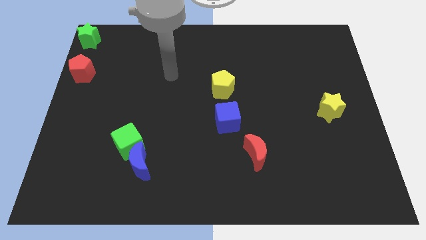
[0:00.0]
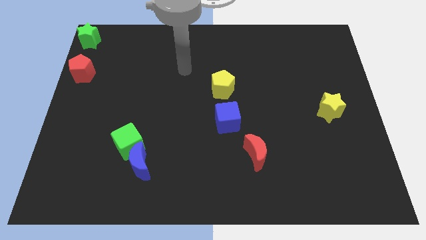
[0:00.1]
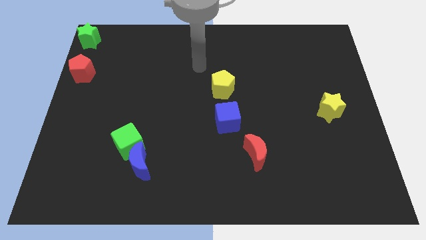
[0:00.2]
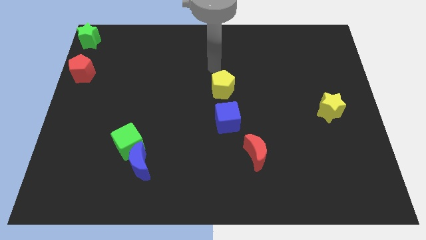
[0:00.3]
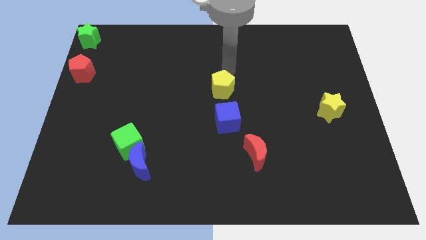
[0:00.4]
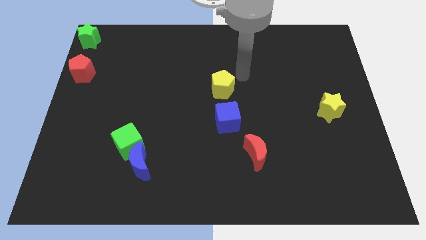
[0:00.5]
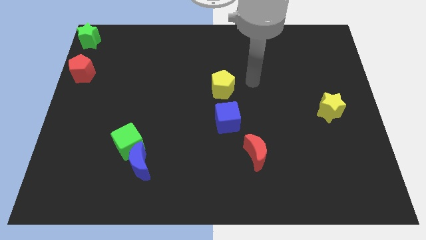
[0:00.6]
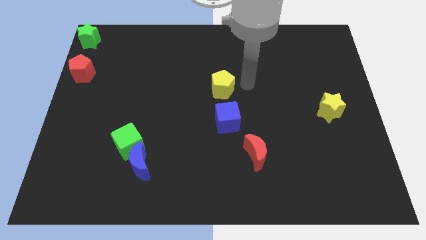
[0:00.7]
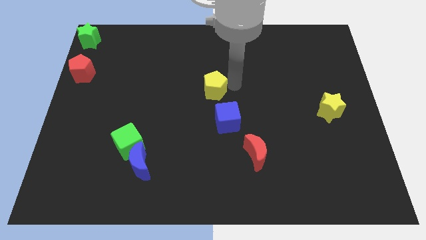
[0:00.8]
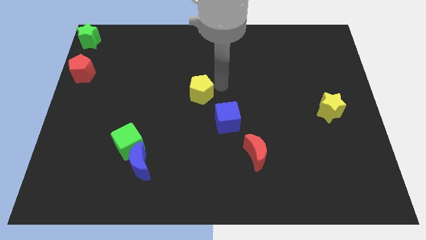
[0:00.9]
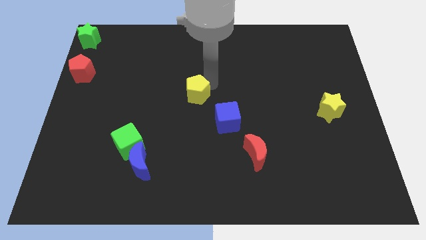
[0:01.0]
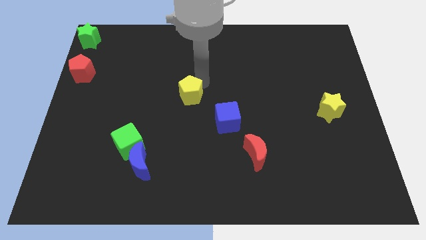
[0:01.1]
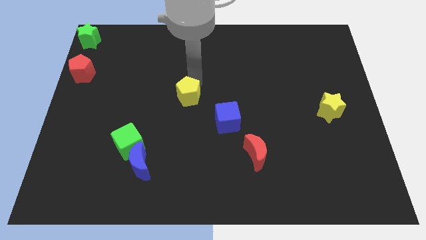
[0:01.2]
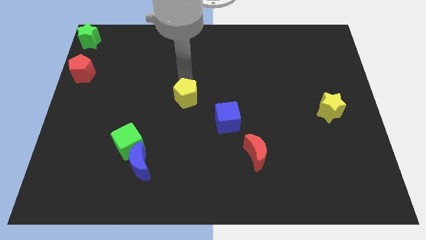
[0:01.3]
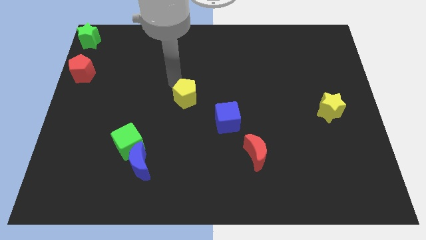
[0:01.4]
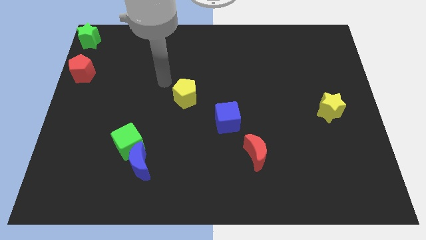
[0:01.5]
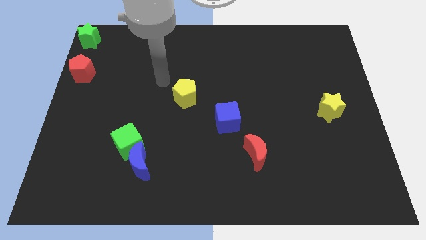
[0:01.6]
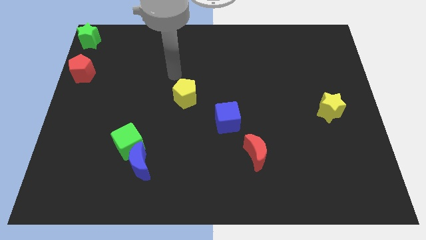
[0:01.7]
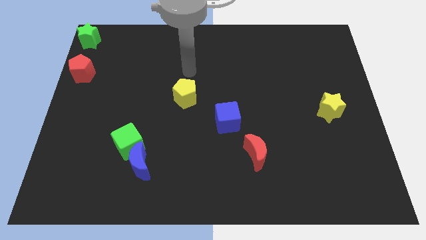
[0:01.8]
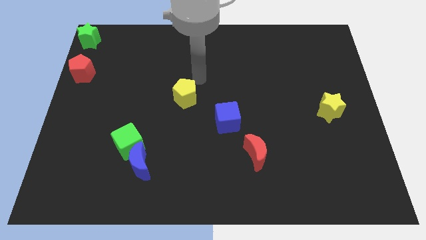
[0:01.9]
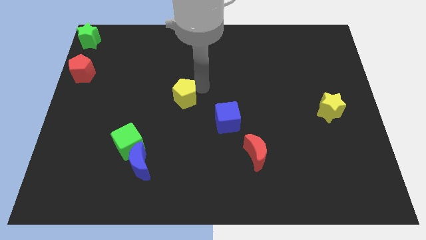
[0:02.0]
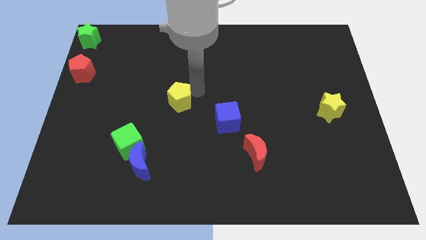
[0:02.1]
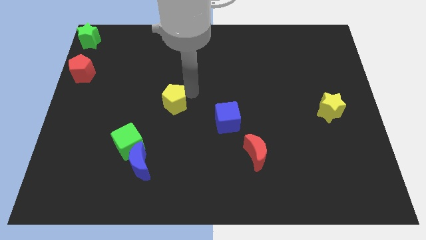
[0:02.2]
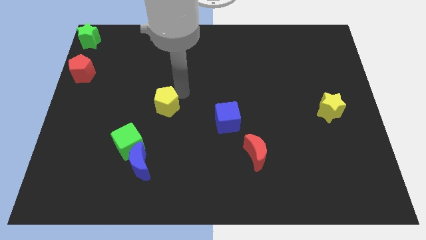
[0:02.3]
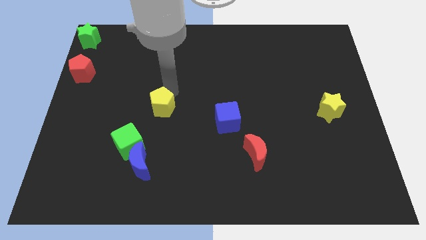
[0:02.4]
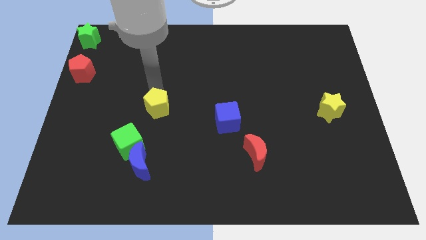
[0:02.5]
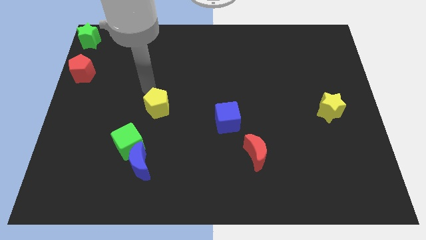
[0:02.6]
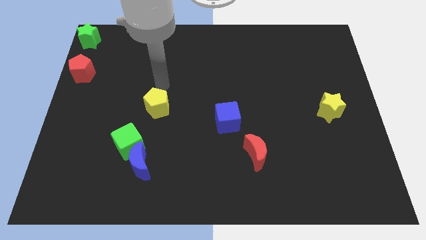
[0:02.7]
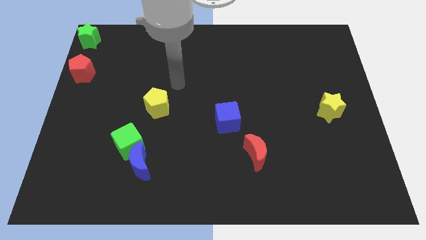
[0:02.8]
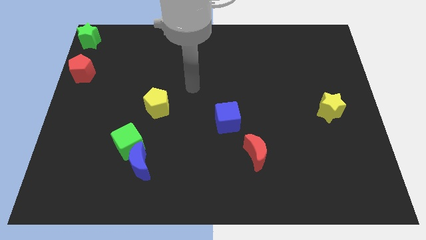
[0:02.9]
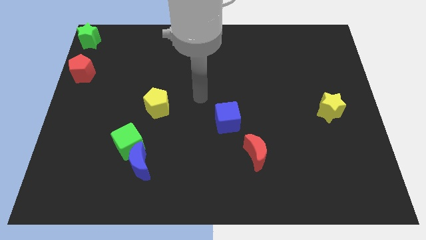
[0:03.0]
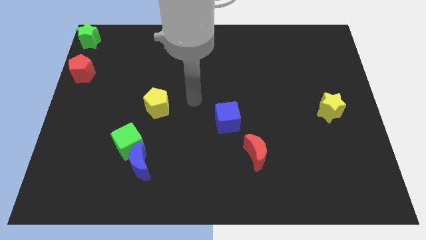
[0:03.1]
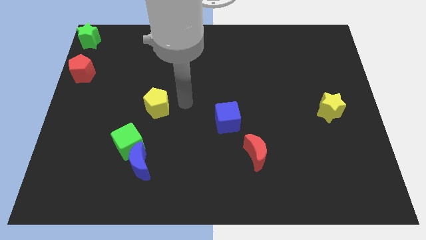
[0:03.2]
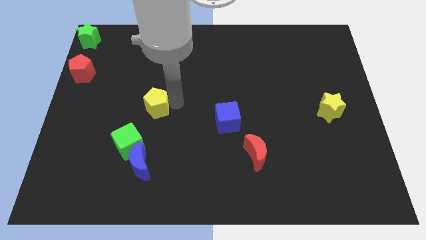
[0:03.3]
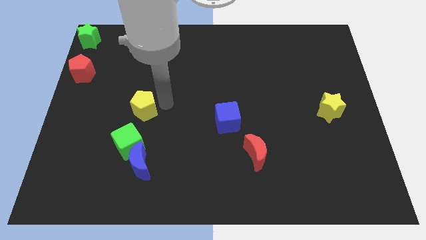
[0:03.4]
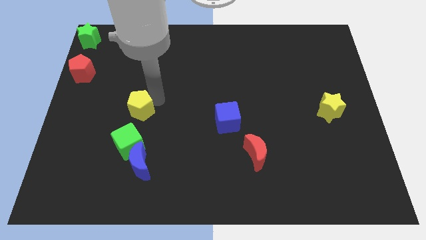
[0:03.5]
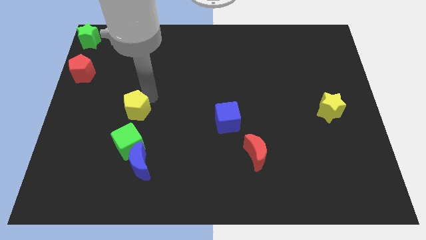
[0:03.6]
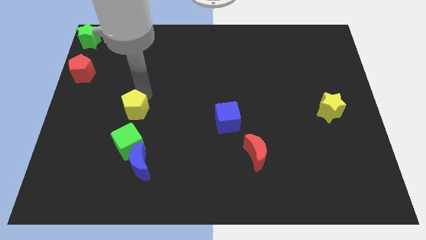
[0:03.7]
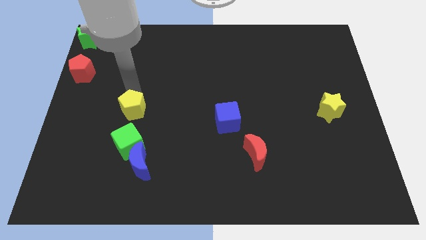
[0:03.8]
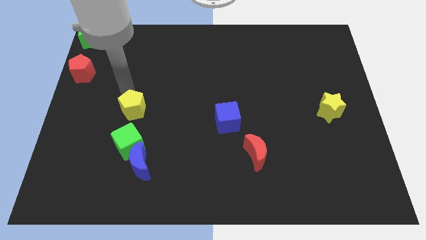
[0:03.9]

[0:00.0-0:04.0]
put the yellow pentagon at the top right side of green cube

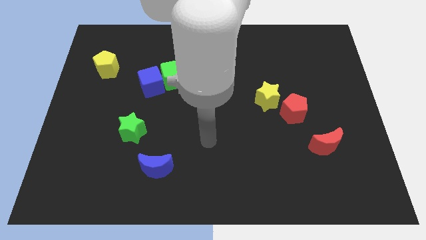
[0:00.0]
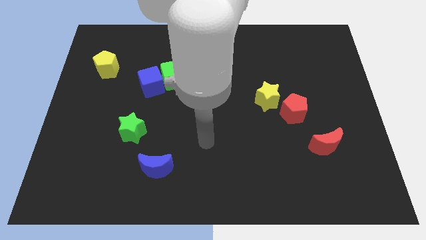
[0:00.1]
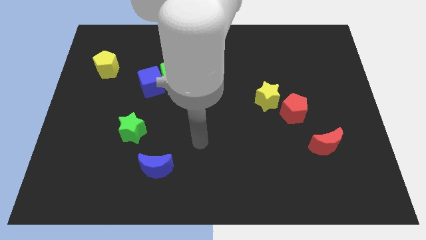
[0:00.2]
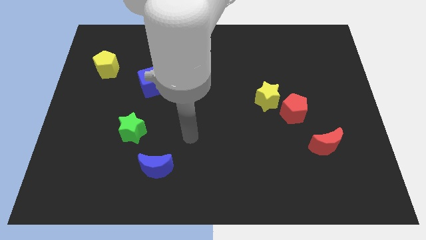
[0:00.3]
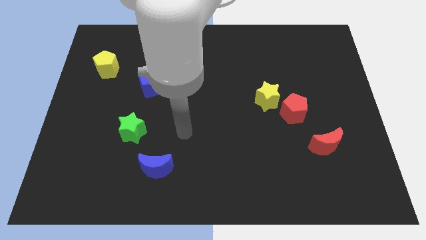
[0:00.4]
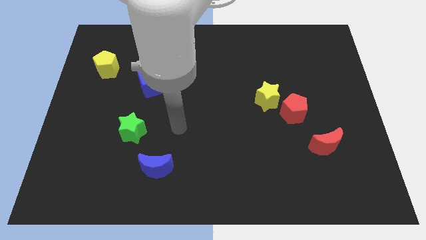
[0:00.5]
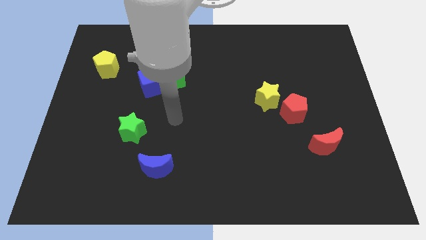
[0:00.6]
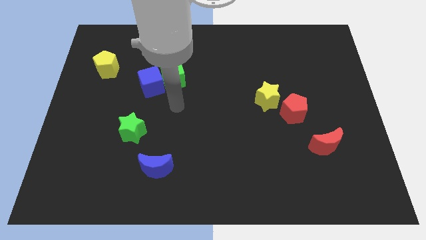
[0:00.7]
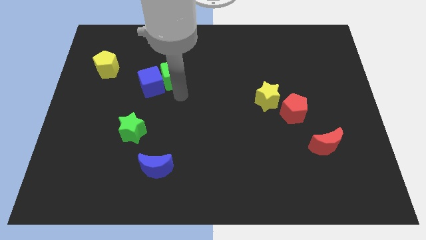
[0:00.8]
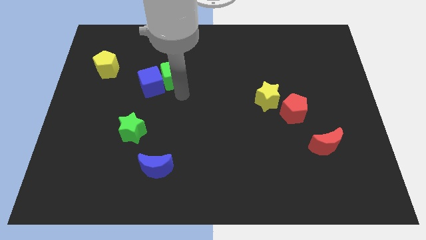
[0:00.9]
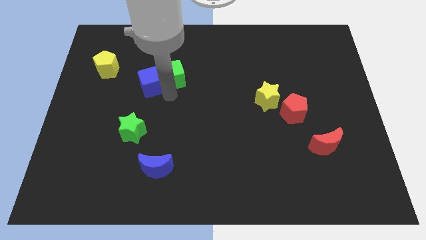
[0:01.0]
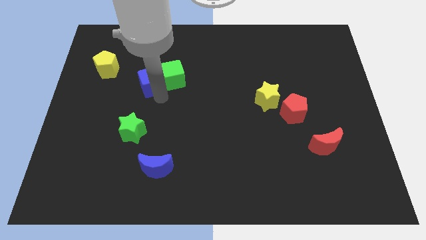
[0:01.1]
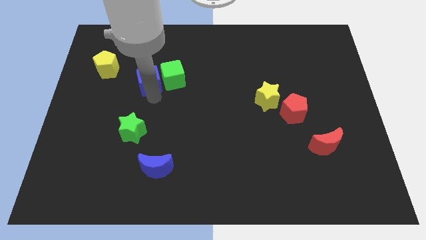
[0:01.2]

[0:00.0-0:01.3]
touch the bottom of blue cube

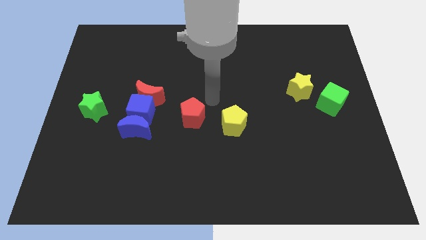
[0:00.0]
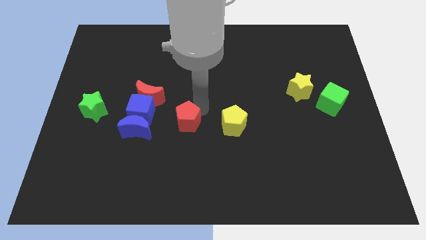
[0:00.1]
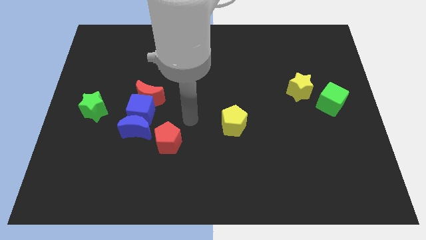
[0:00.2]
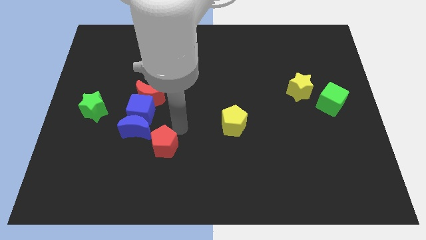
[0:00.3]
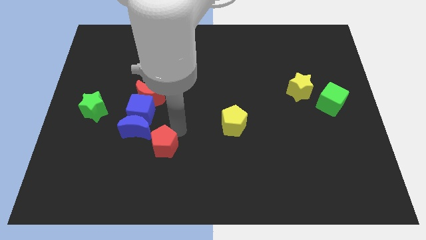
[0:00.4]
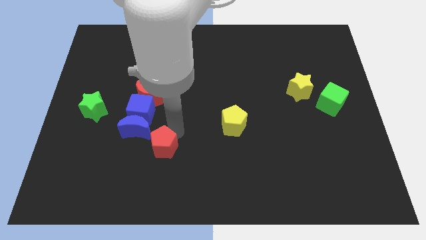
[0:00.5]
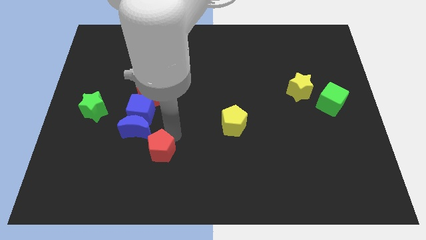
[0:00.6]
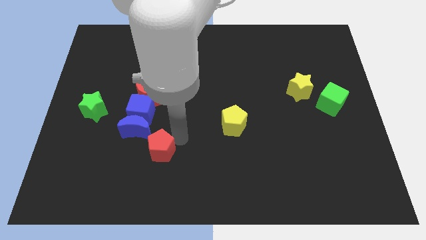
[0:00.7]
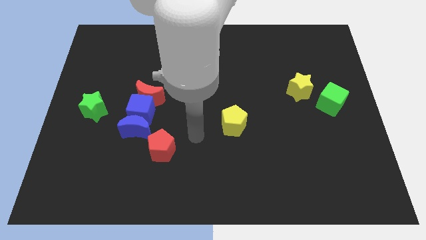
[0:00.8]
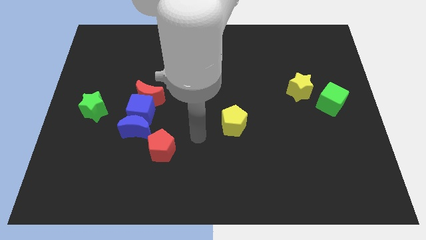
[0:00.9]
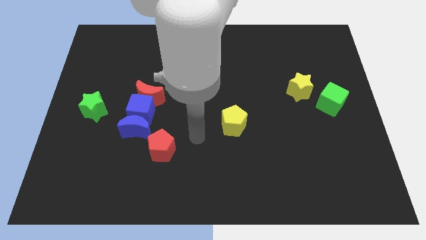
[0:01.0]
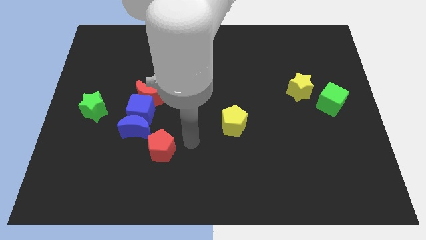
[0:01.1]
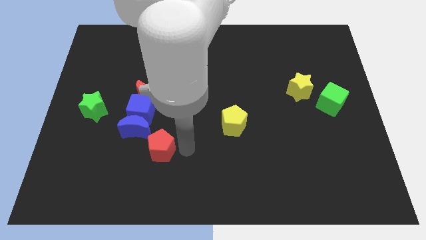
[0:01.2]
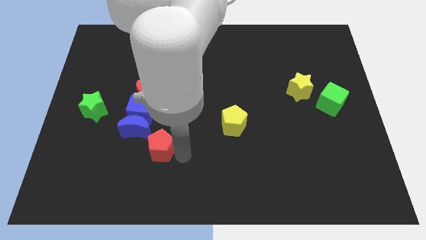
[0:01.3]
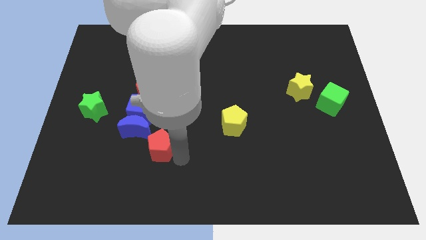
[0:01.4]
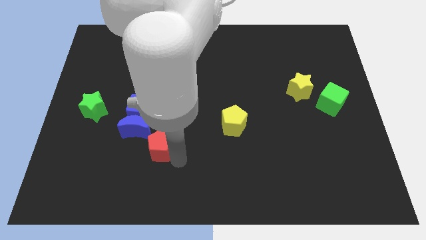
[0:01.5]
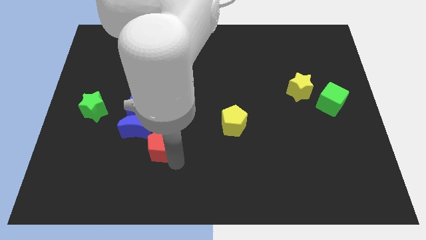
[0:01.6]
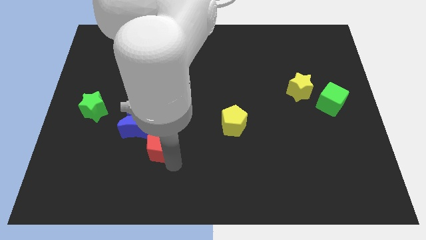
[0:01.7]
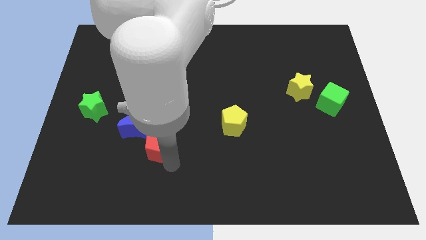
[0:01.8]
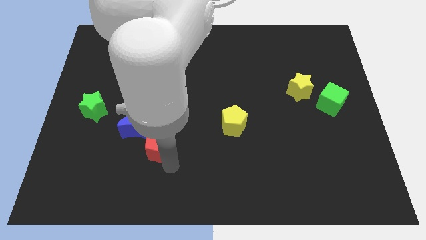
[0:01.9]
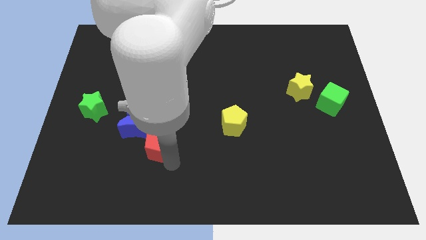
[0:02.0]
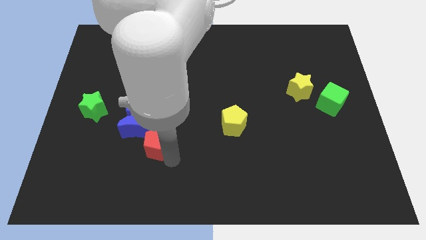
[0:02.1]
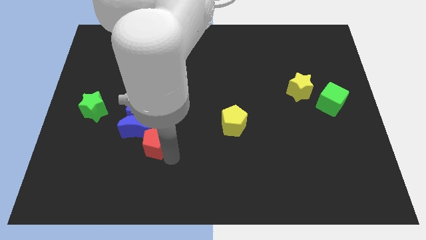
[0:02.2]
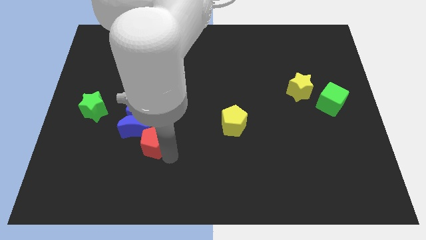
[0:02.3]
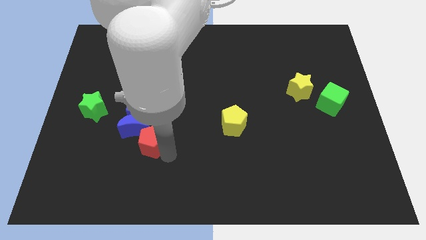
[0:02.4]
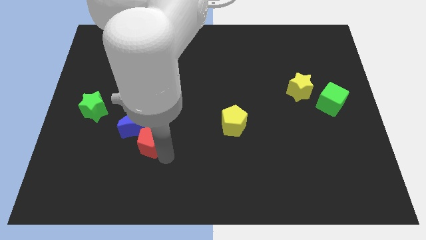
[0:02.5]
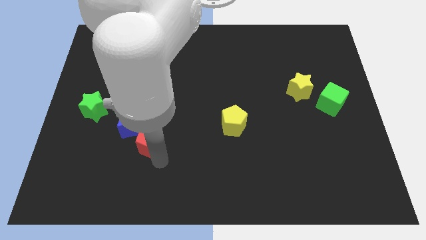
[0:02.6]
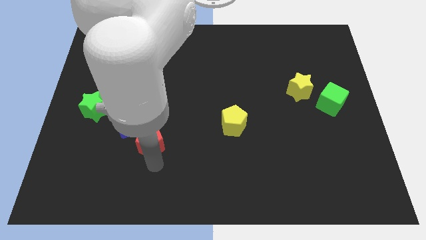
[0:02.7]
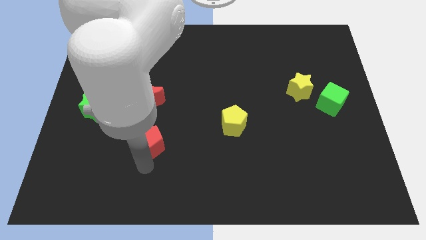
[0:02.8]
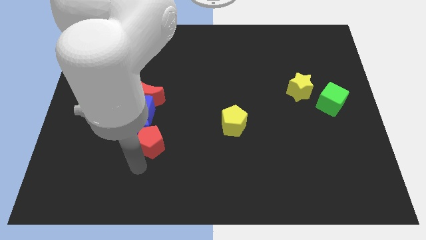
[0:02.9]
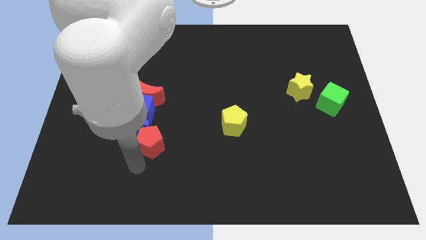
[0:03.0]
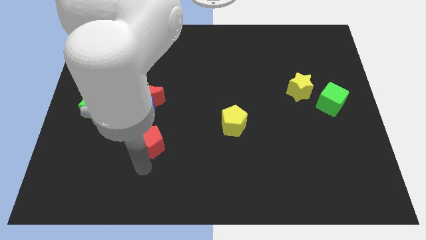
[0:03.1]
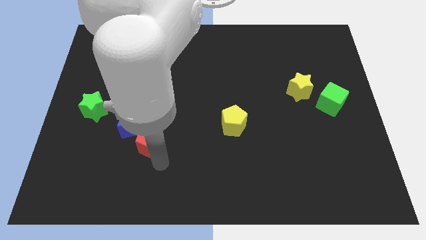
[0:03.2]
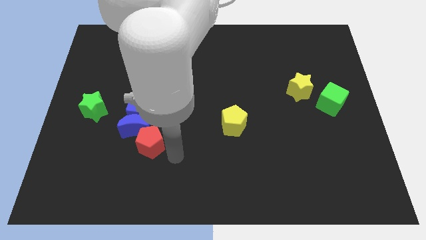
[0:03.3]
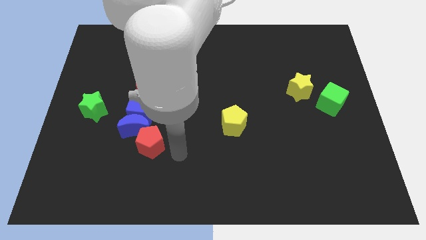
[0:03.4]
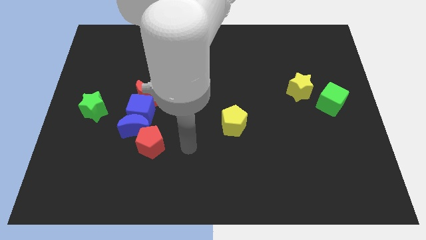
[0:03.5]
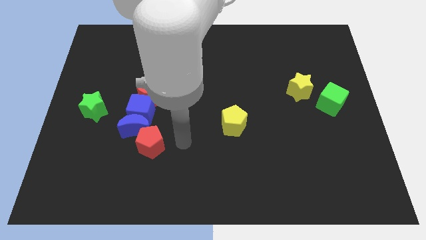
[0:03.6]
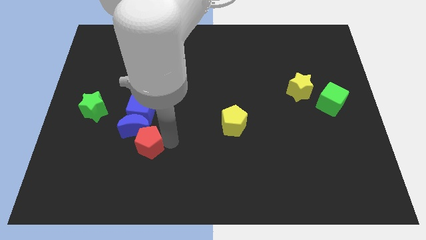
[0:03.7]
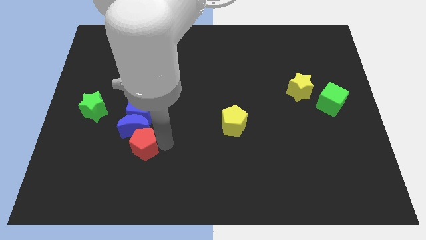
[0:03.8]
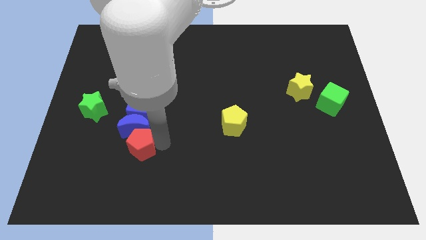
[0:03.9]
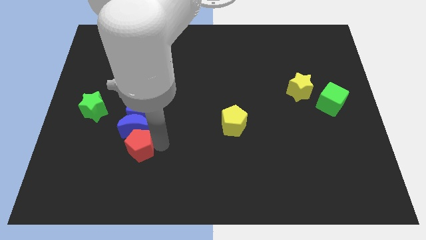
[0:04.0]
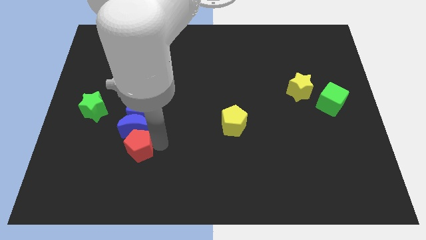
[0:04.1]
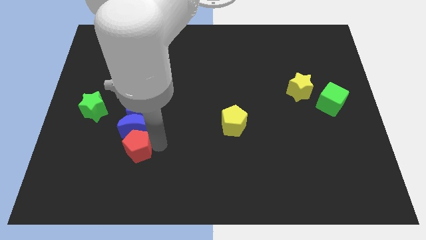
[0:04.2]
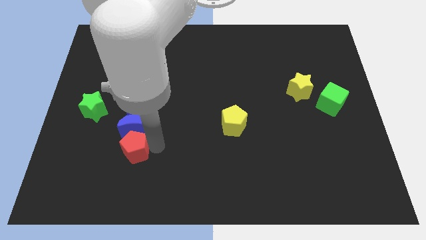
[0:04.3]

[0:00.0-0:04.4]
place red pentagon below the blue crescent
